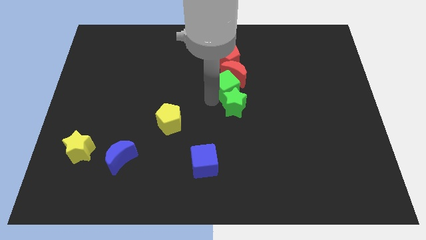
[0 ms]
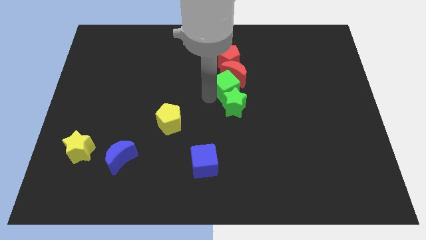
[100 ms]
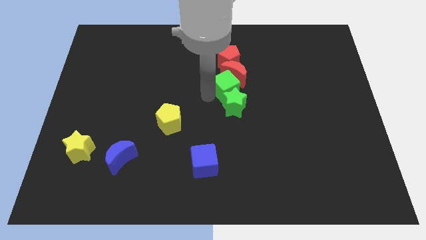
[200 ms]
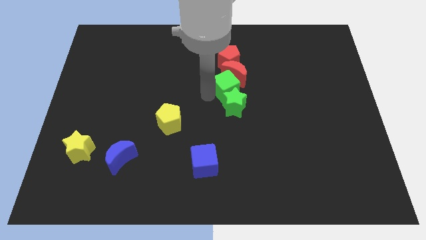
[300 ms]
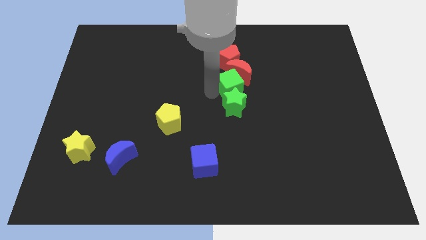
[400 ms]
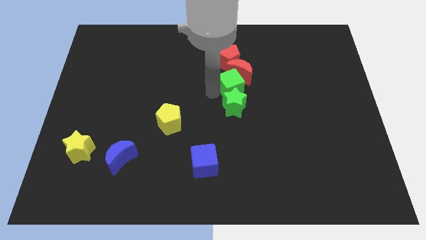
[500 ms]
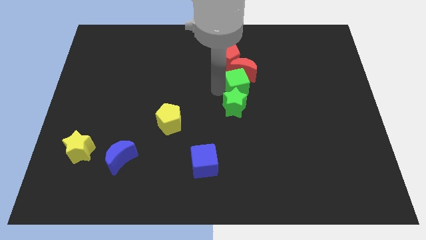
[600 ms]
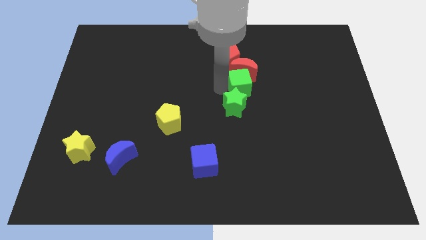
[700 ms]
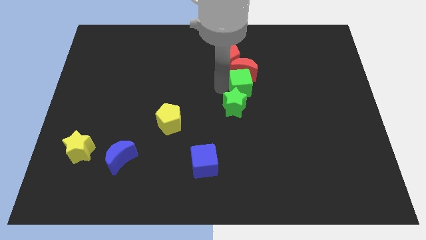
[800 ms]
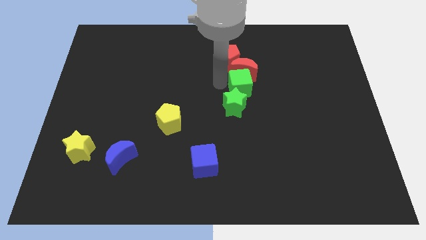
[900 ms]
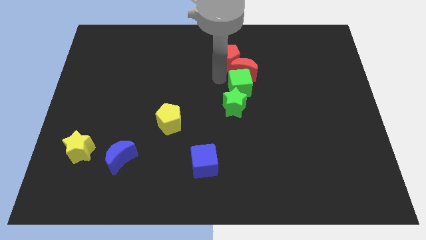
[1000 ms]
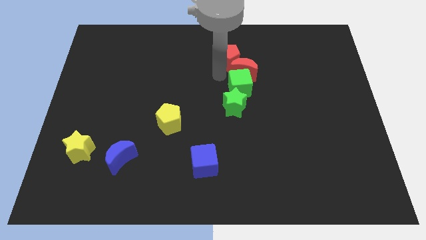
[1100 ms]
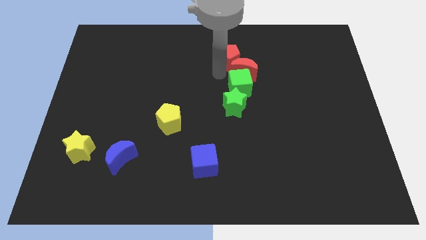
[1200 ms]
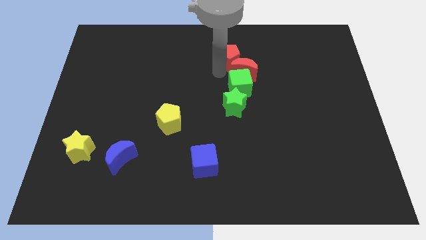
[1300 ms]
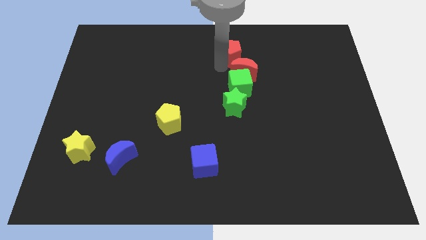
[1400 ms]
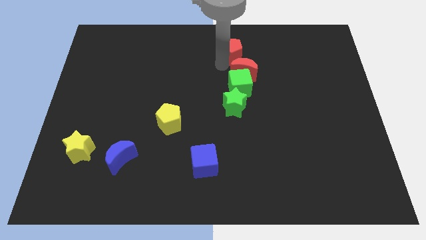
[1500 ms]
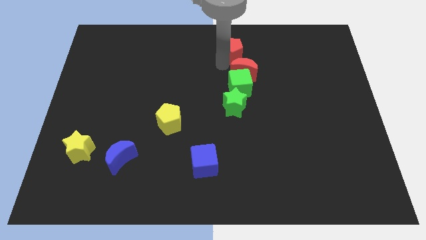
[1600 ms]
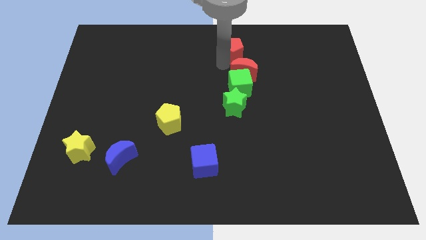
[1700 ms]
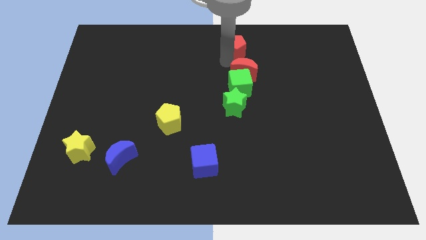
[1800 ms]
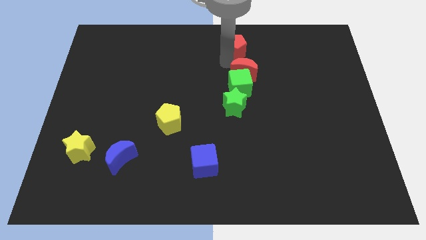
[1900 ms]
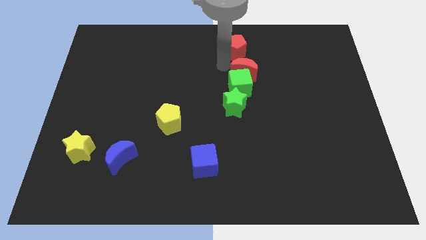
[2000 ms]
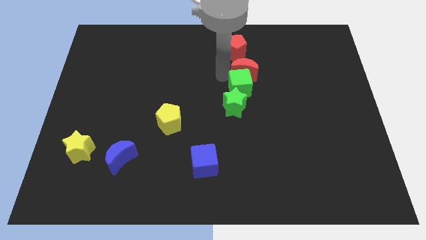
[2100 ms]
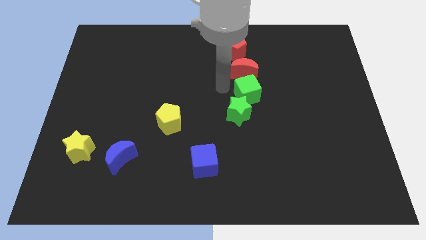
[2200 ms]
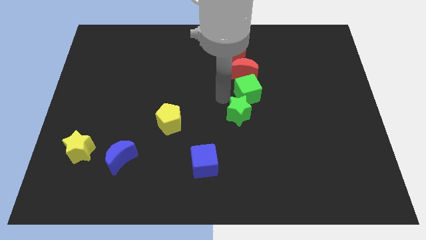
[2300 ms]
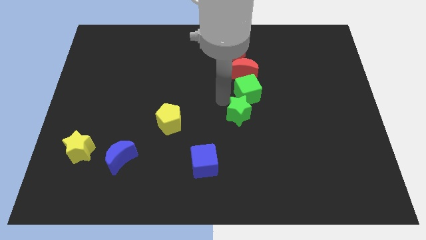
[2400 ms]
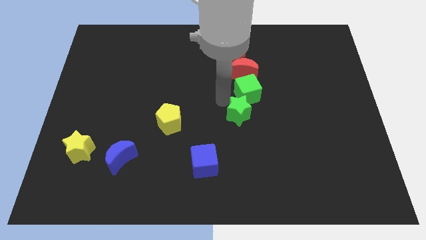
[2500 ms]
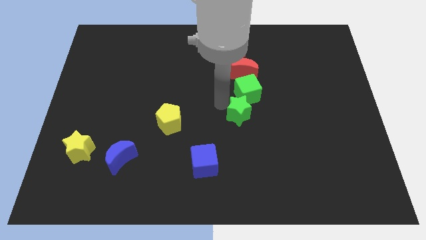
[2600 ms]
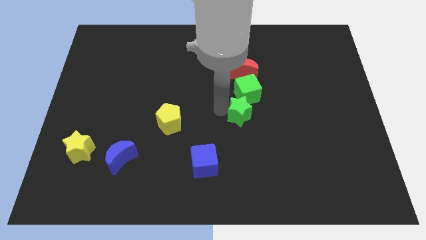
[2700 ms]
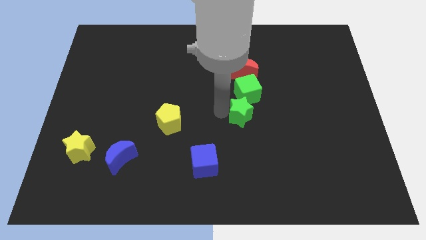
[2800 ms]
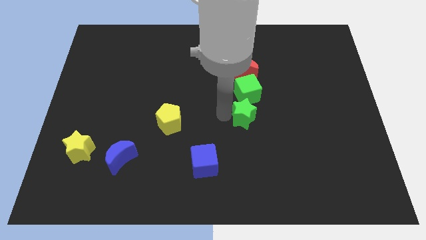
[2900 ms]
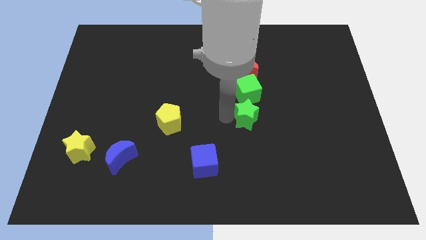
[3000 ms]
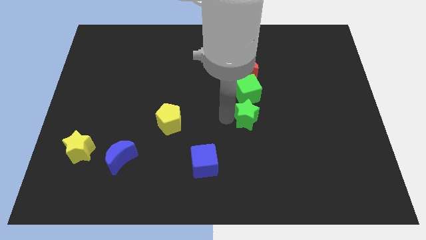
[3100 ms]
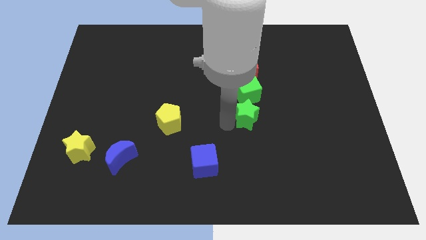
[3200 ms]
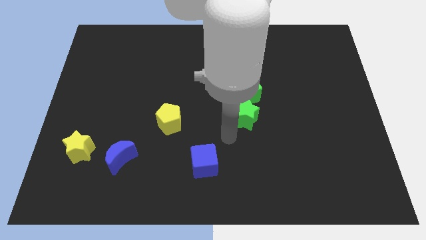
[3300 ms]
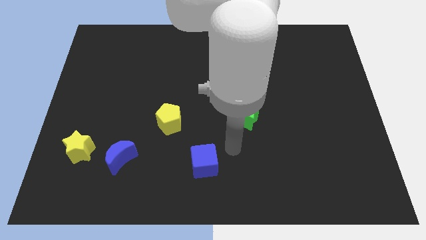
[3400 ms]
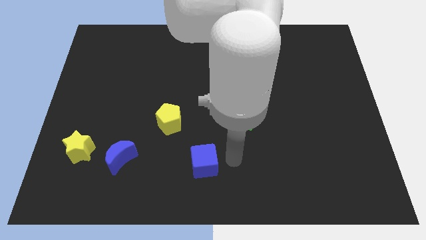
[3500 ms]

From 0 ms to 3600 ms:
move the green star with a green cube

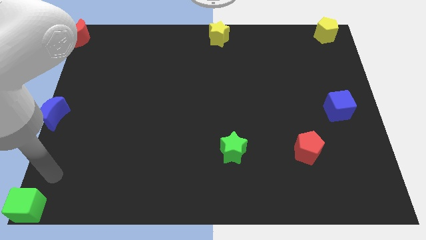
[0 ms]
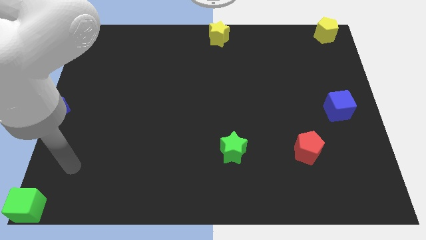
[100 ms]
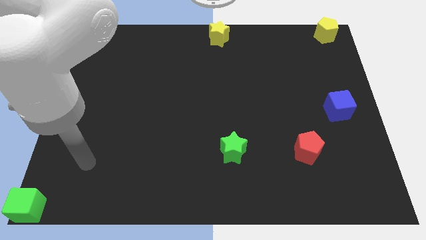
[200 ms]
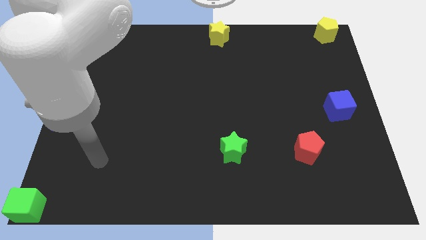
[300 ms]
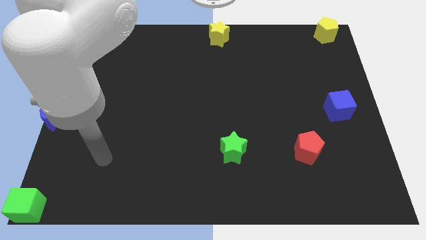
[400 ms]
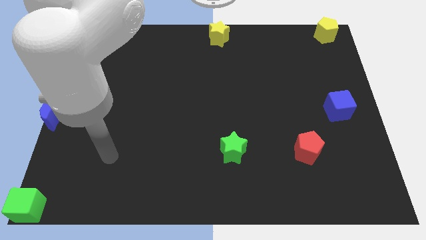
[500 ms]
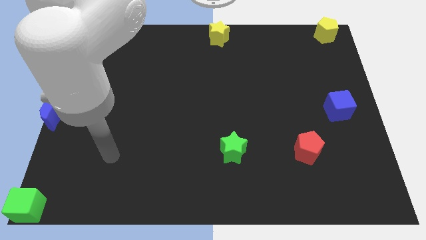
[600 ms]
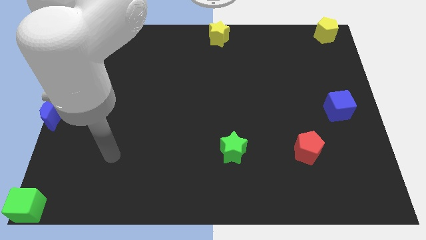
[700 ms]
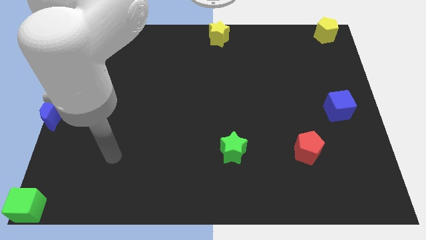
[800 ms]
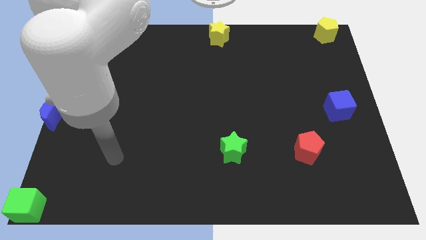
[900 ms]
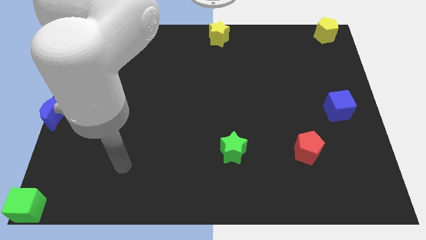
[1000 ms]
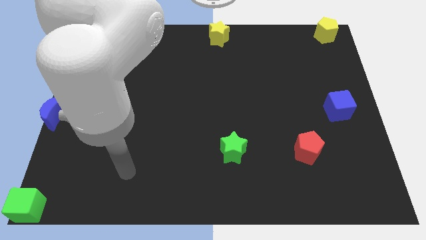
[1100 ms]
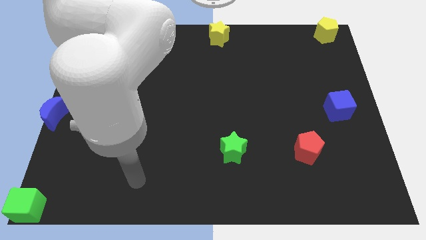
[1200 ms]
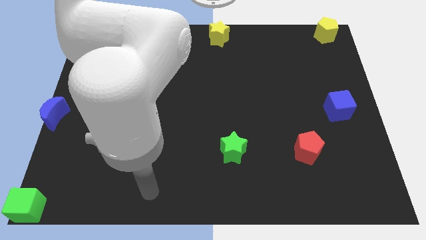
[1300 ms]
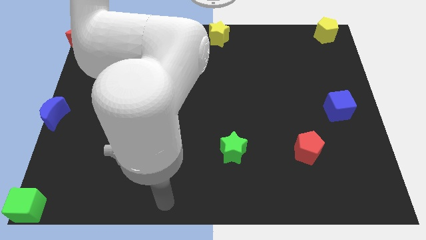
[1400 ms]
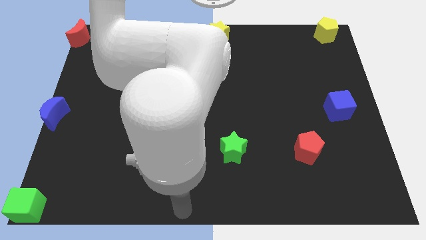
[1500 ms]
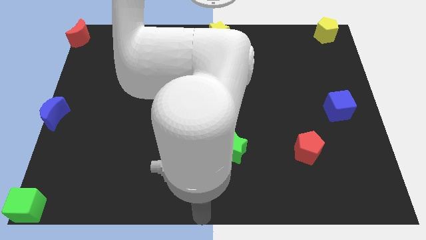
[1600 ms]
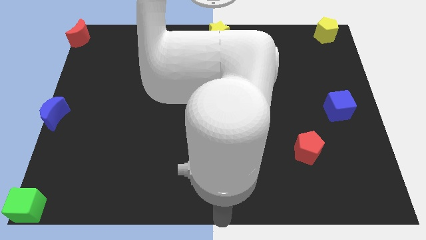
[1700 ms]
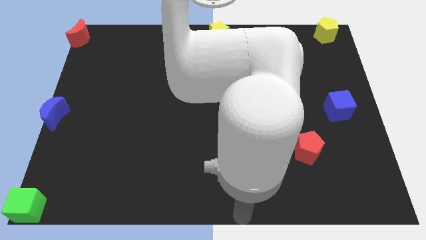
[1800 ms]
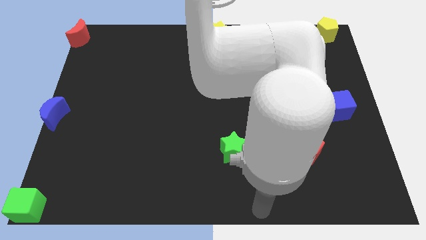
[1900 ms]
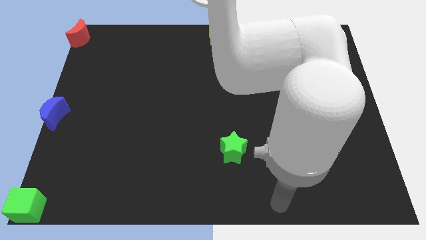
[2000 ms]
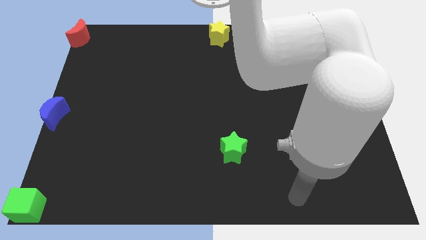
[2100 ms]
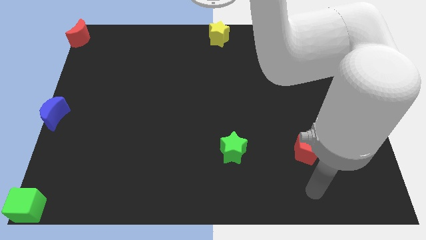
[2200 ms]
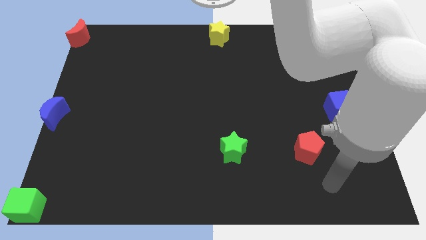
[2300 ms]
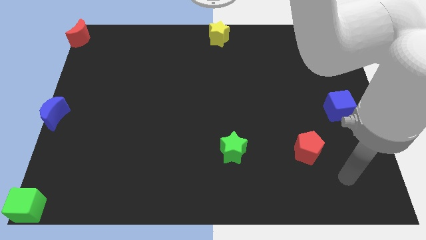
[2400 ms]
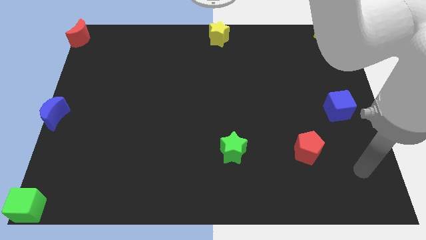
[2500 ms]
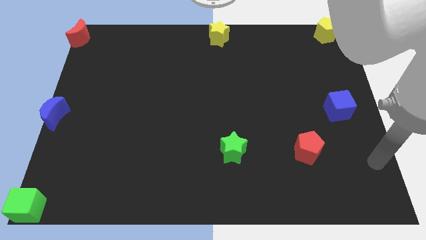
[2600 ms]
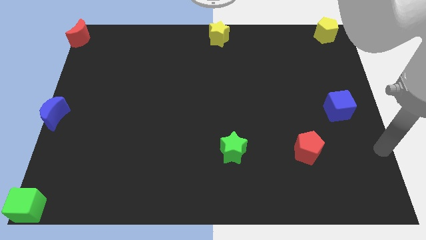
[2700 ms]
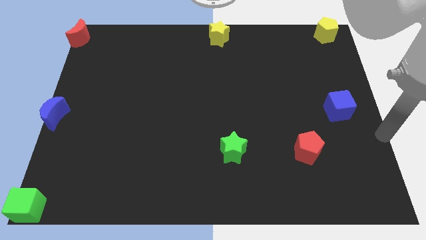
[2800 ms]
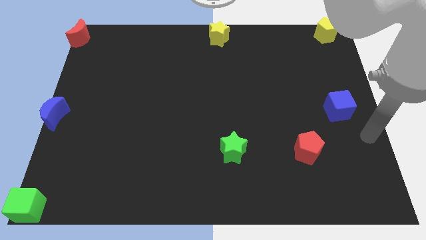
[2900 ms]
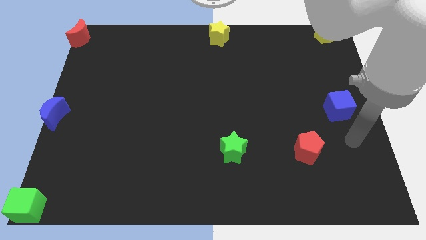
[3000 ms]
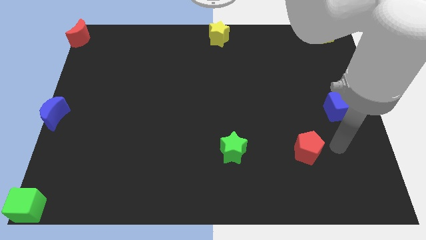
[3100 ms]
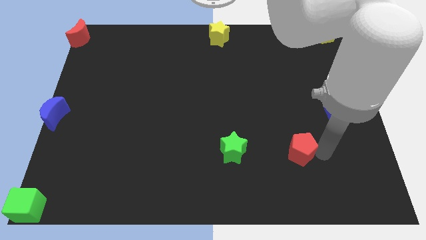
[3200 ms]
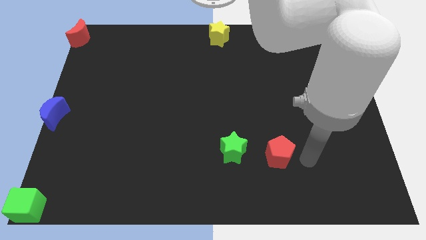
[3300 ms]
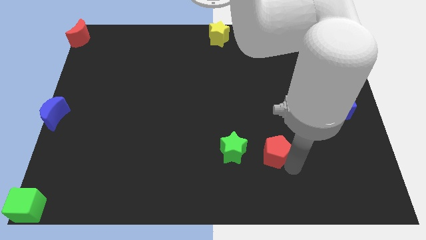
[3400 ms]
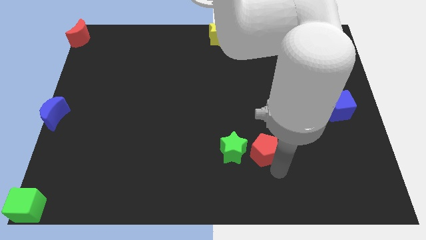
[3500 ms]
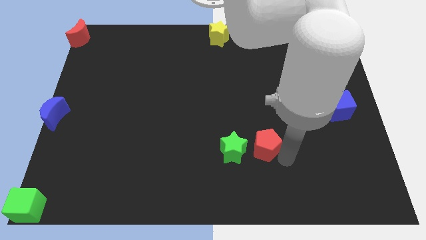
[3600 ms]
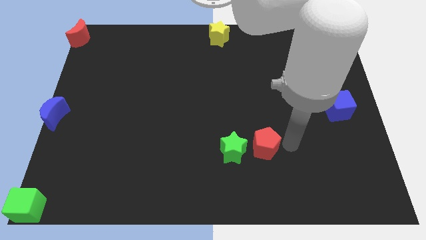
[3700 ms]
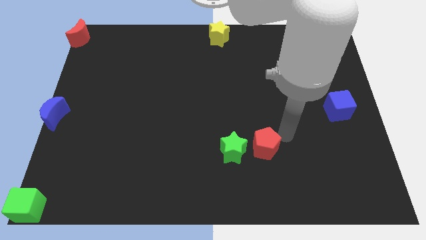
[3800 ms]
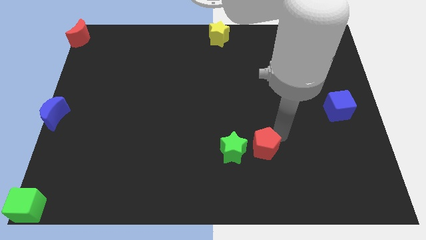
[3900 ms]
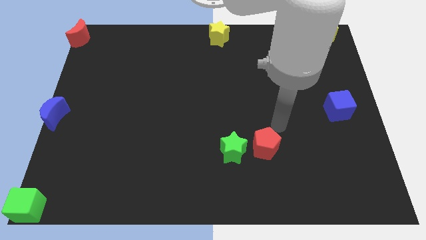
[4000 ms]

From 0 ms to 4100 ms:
put red pentagon right to the green star

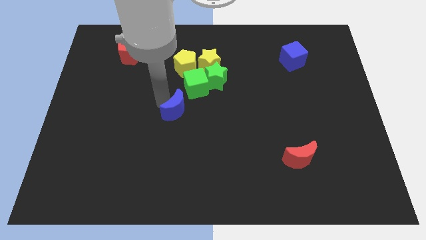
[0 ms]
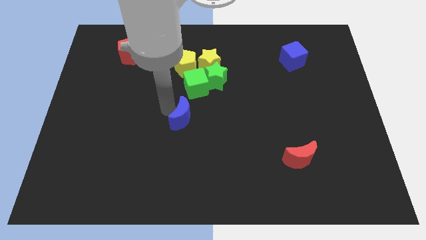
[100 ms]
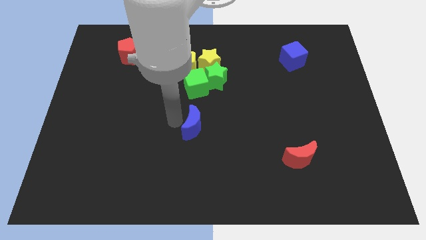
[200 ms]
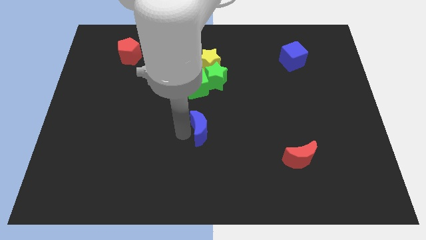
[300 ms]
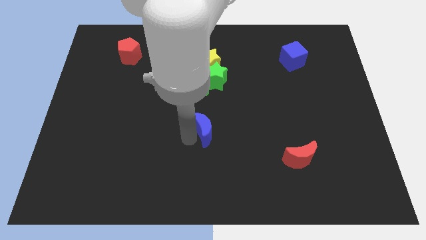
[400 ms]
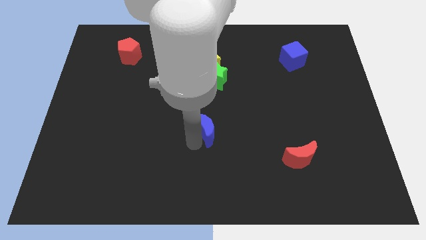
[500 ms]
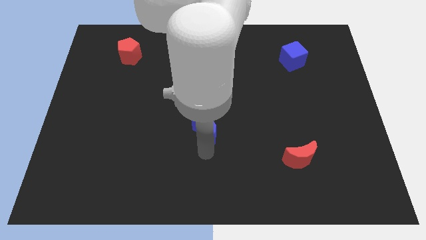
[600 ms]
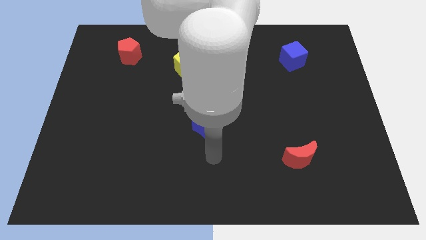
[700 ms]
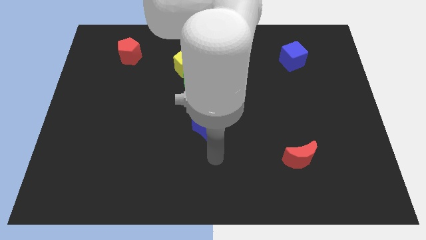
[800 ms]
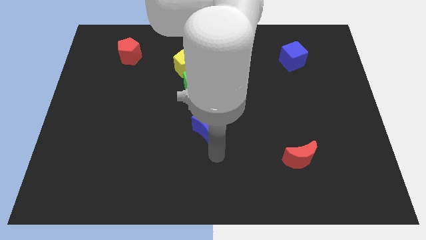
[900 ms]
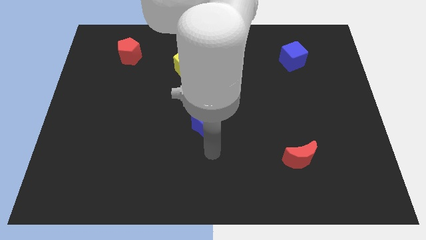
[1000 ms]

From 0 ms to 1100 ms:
separate blue crescent from green cube

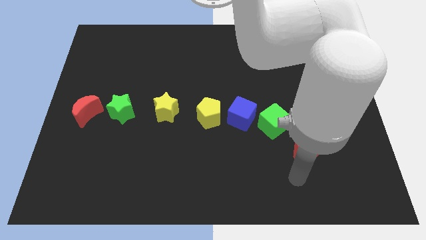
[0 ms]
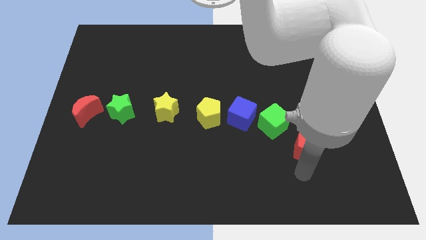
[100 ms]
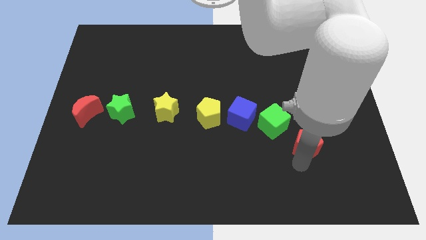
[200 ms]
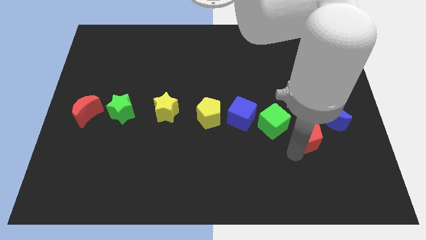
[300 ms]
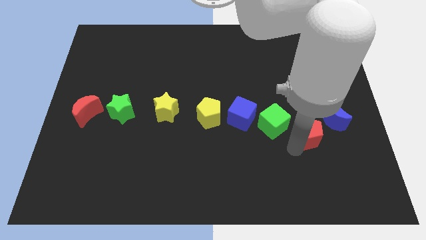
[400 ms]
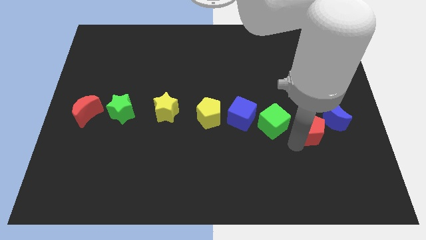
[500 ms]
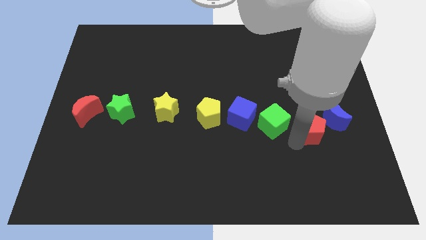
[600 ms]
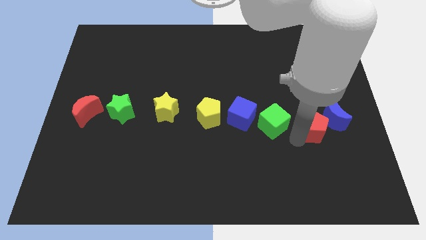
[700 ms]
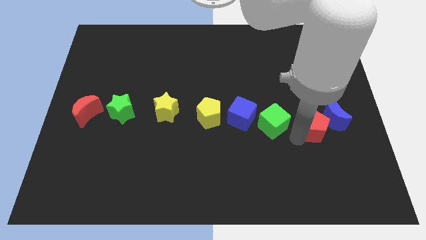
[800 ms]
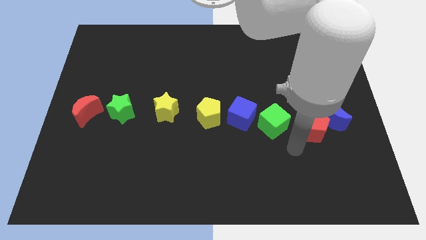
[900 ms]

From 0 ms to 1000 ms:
push the red pentagon in between the green cube and the blue crescent
